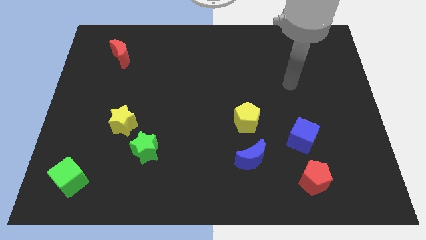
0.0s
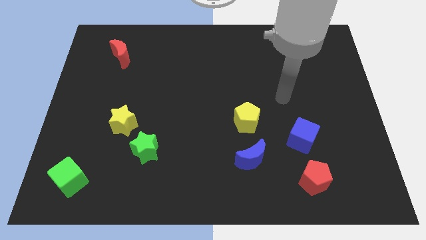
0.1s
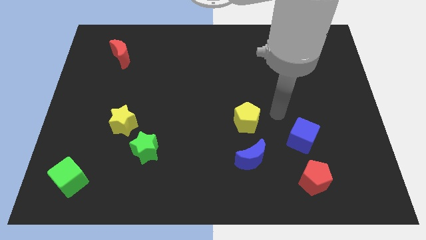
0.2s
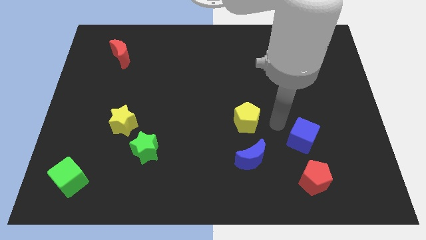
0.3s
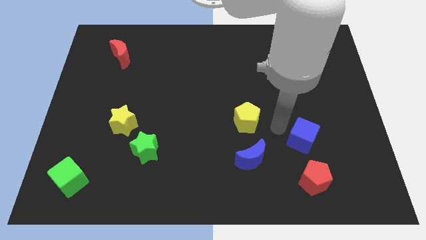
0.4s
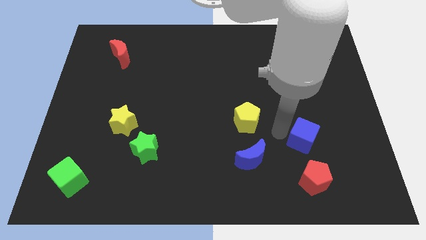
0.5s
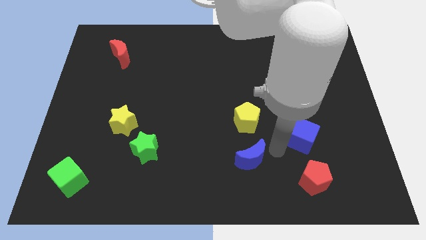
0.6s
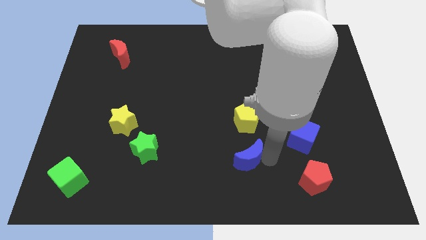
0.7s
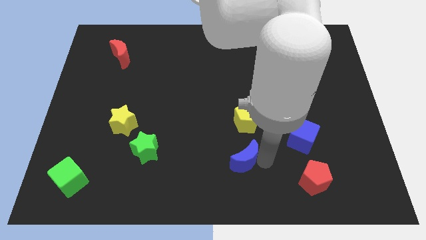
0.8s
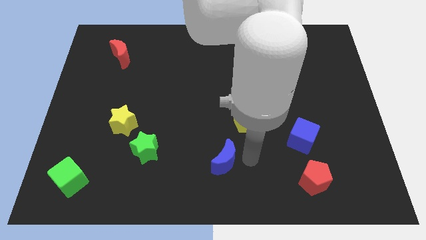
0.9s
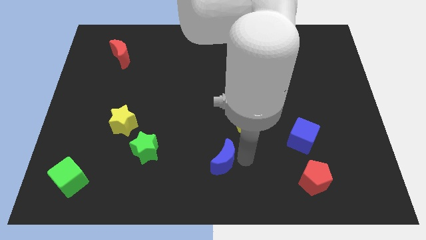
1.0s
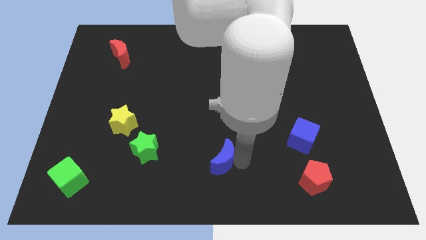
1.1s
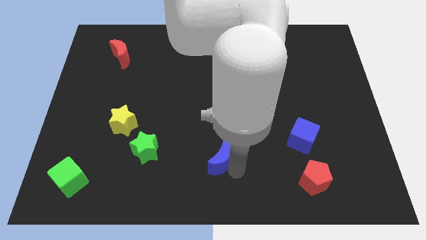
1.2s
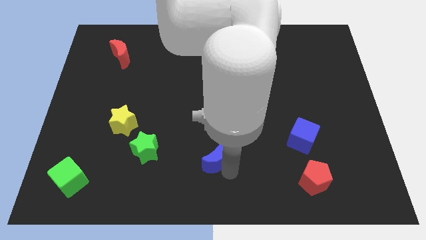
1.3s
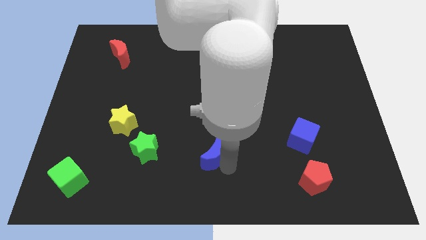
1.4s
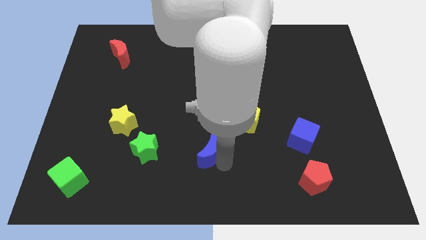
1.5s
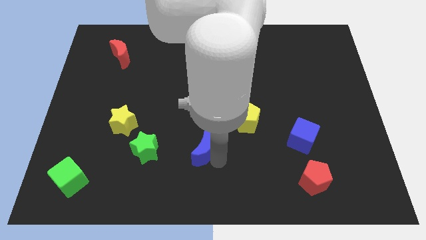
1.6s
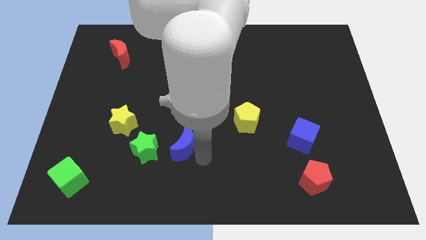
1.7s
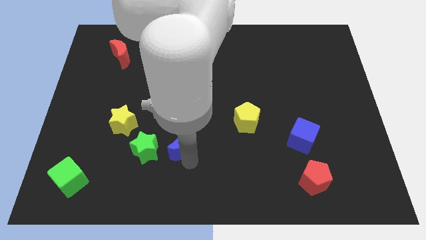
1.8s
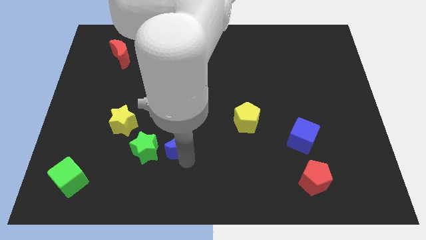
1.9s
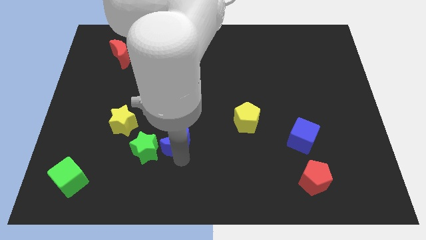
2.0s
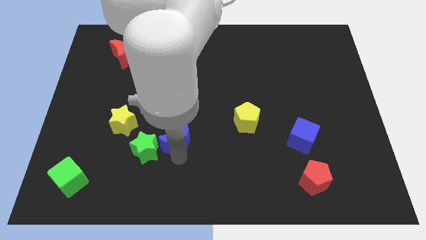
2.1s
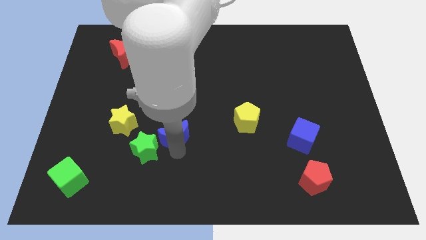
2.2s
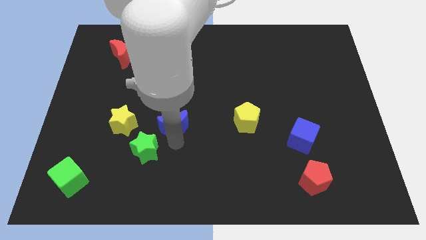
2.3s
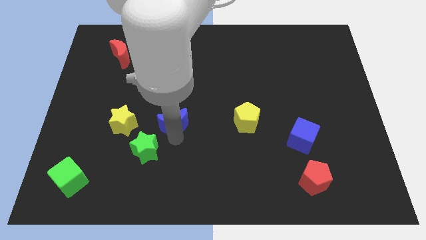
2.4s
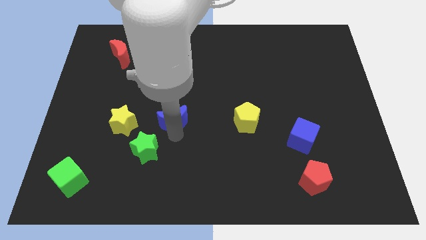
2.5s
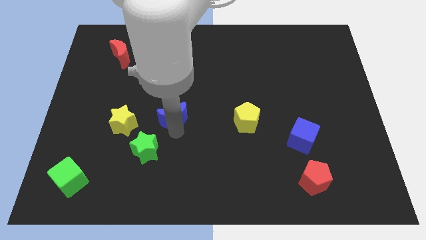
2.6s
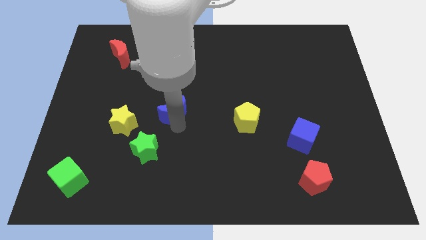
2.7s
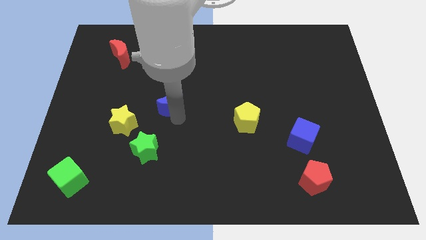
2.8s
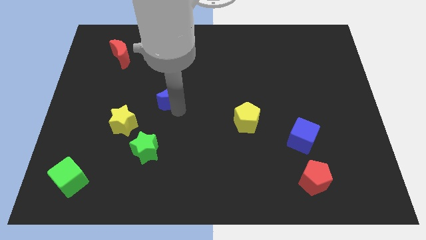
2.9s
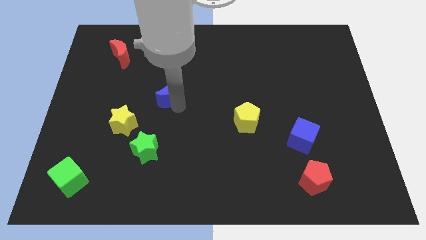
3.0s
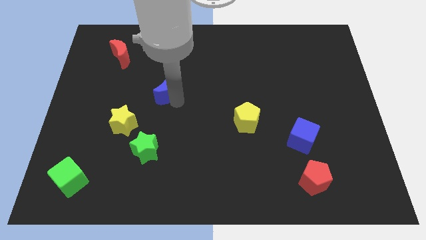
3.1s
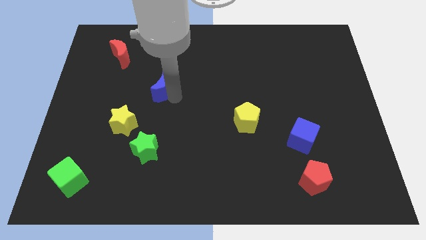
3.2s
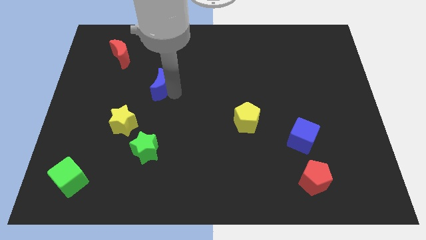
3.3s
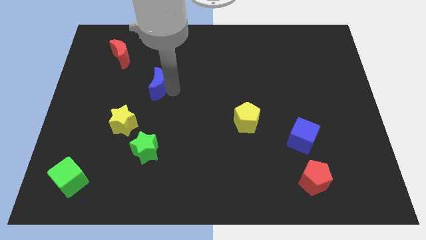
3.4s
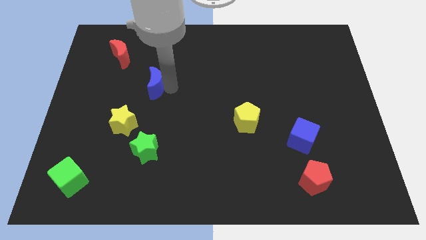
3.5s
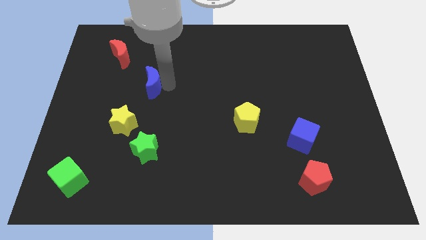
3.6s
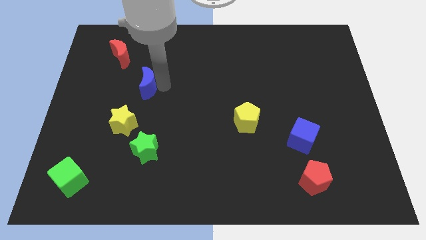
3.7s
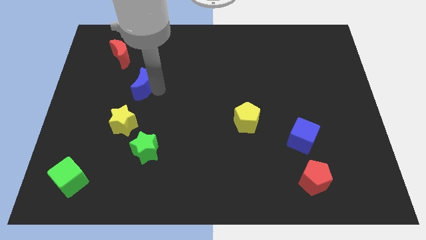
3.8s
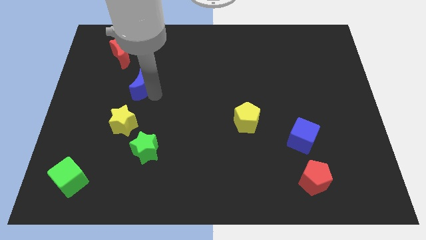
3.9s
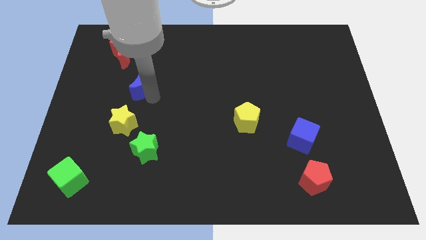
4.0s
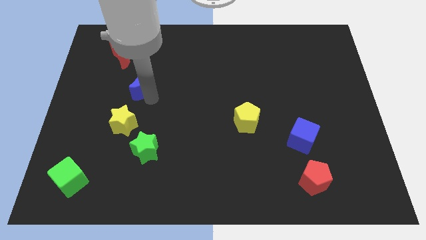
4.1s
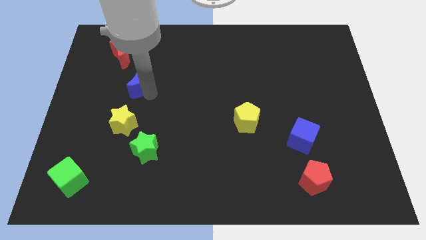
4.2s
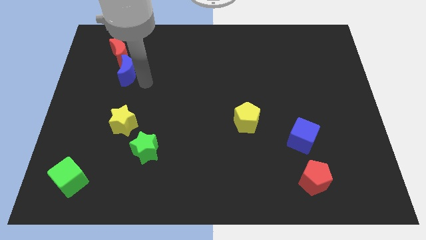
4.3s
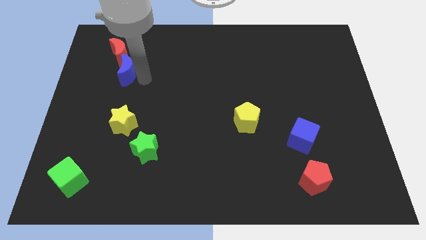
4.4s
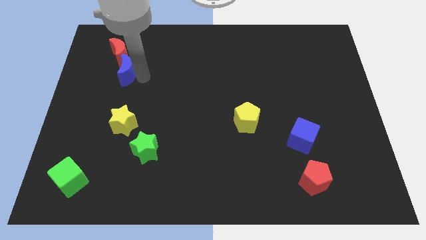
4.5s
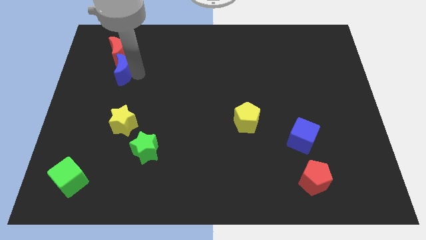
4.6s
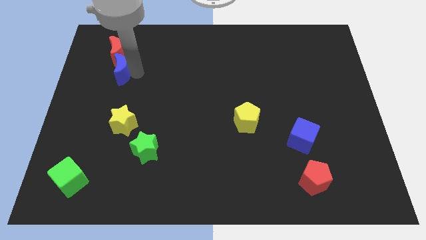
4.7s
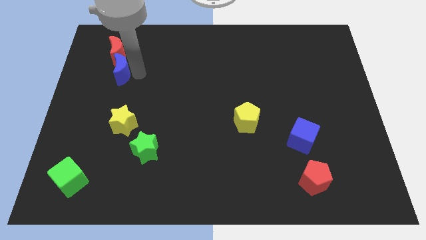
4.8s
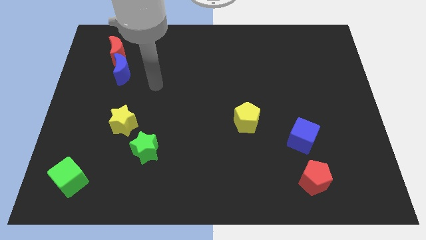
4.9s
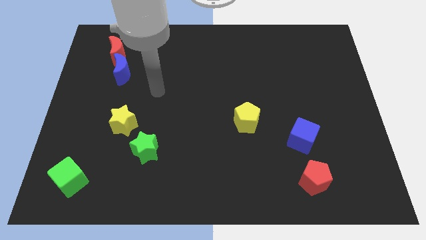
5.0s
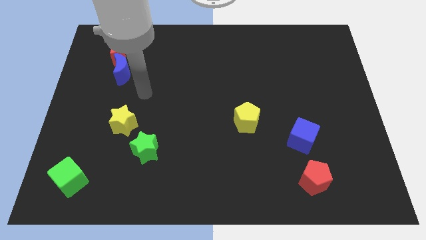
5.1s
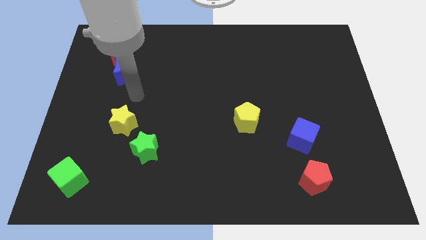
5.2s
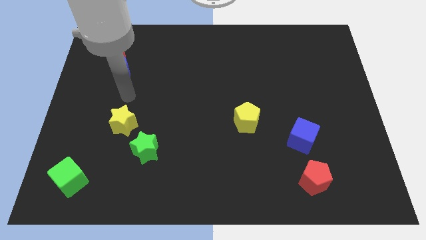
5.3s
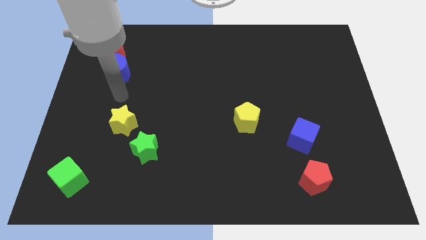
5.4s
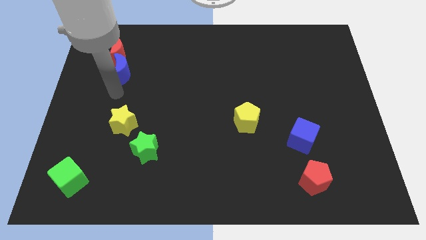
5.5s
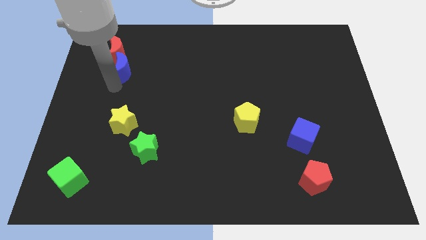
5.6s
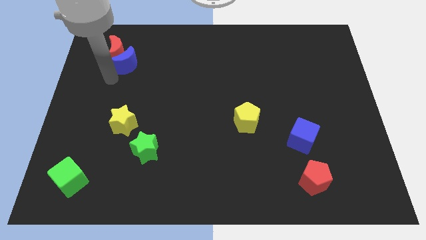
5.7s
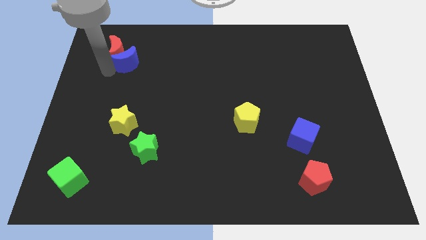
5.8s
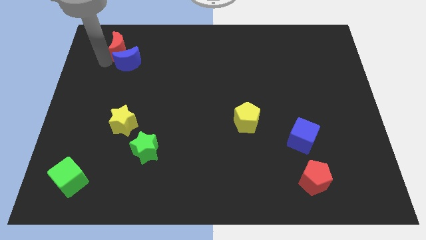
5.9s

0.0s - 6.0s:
slide the blue moon next to the red moon

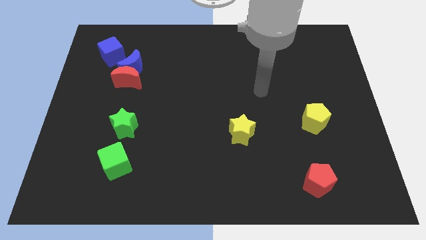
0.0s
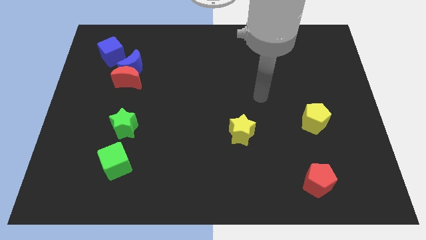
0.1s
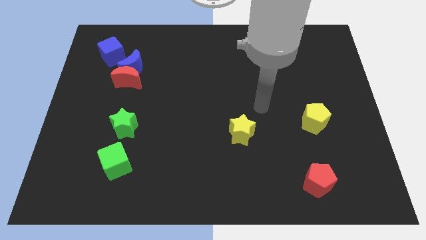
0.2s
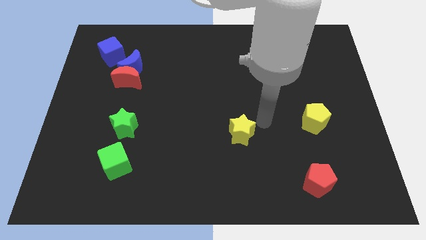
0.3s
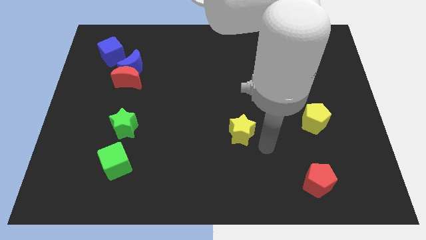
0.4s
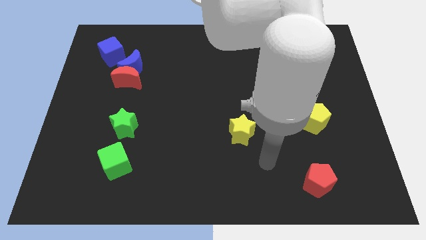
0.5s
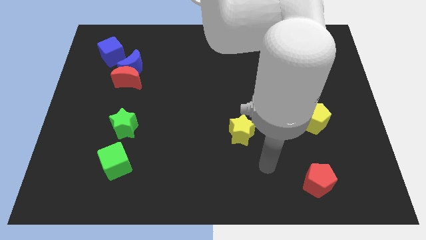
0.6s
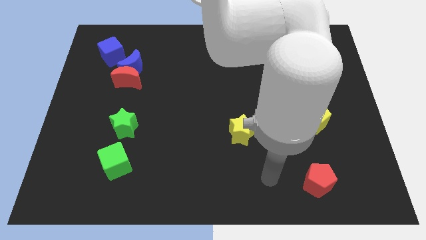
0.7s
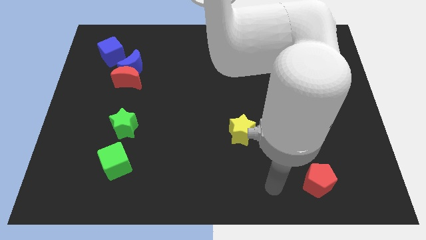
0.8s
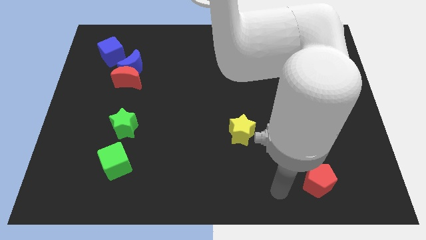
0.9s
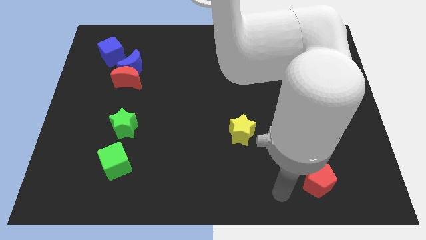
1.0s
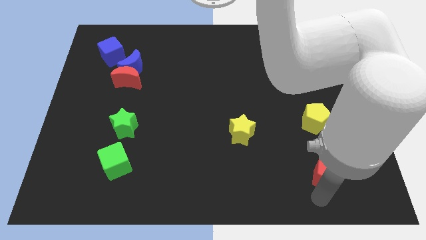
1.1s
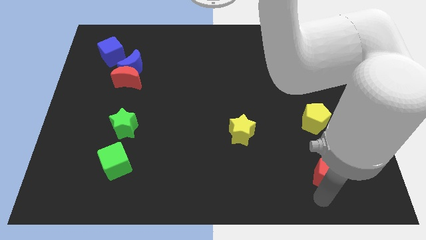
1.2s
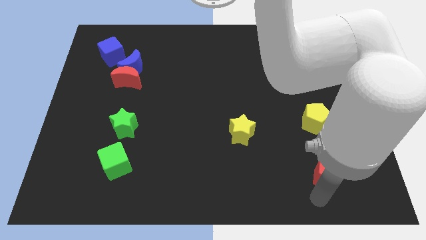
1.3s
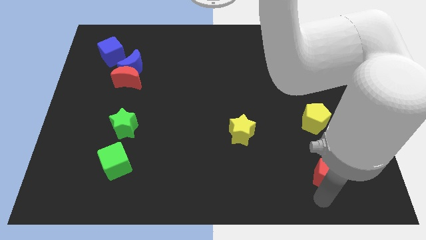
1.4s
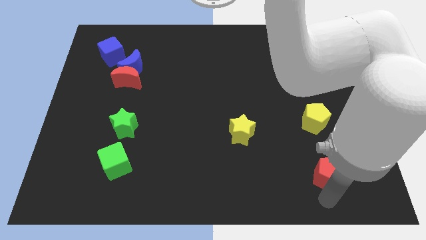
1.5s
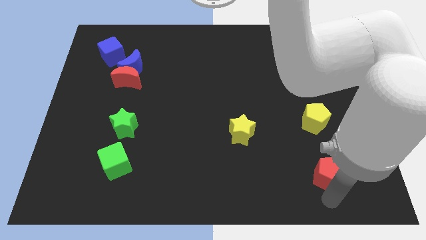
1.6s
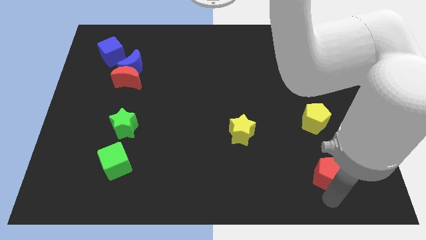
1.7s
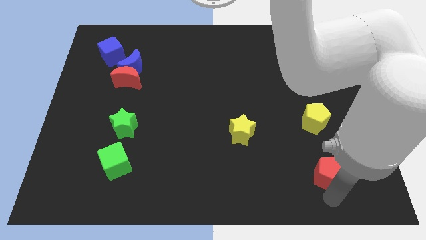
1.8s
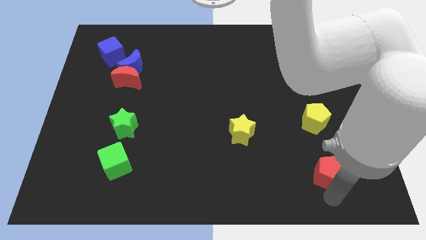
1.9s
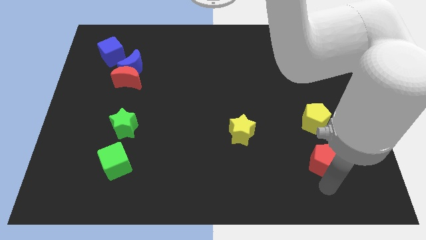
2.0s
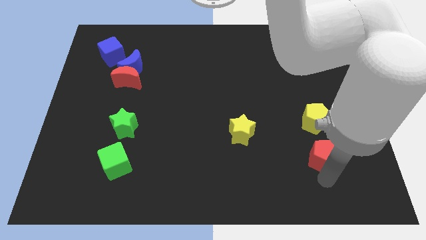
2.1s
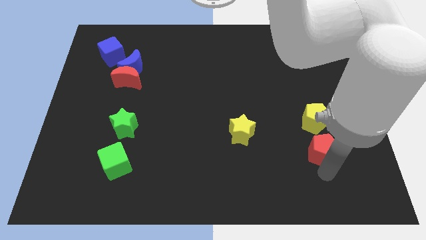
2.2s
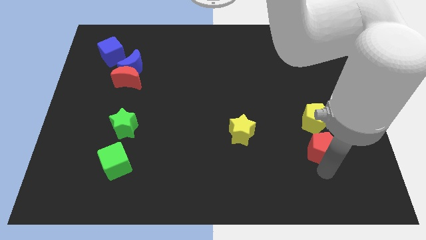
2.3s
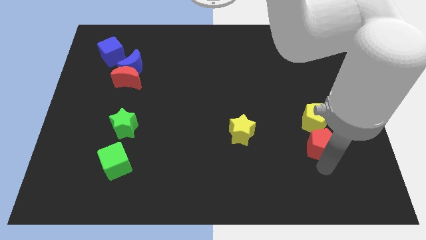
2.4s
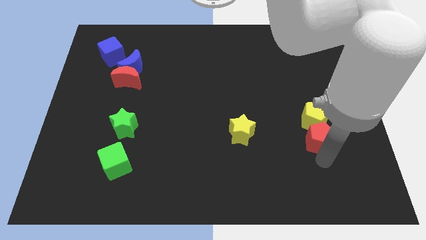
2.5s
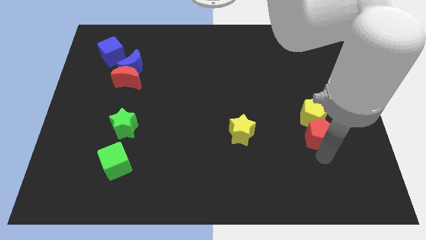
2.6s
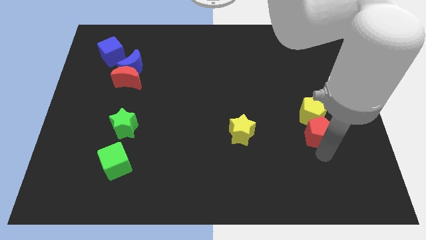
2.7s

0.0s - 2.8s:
push the red pentagon close to the yellow pentagon
